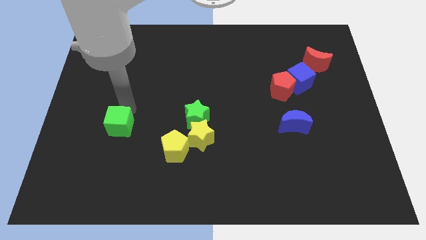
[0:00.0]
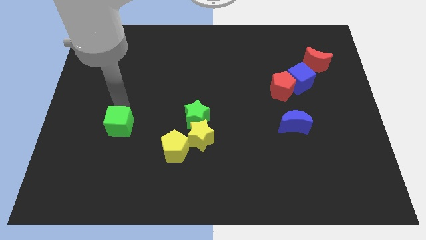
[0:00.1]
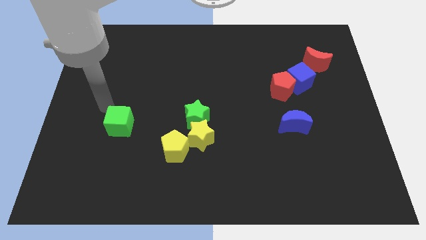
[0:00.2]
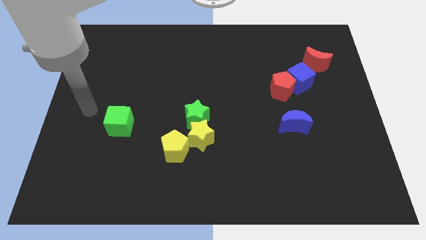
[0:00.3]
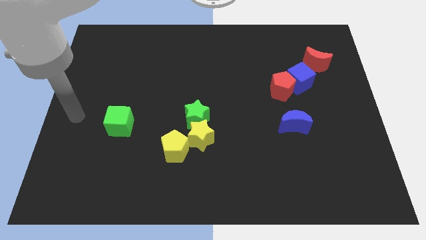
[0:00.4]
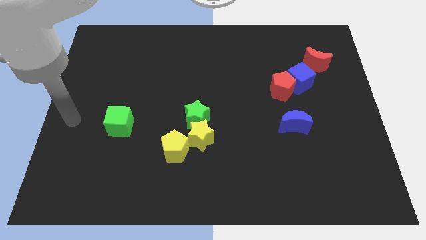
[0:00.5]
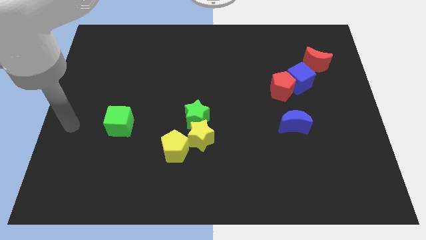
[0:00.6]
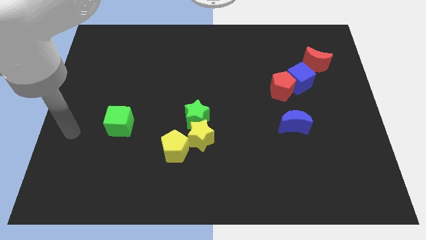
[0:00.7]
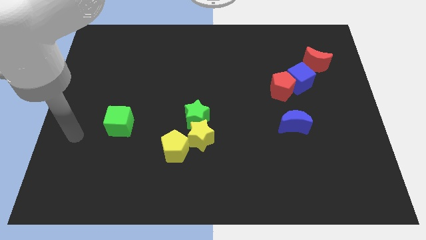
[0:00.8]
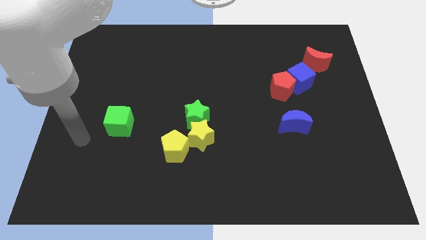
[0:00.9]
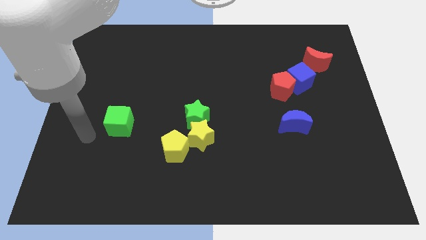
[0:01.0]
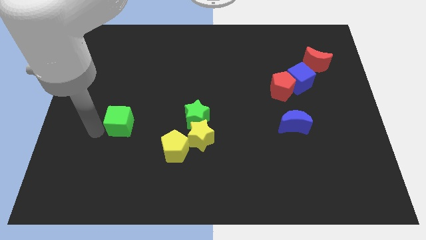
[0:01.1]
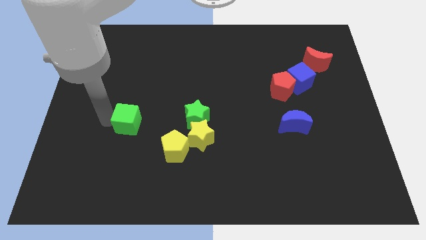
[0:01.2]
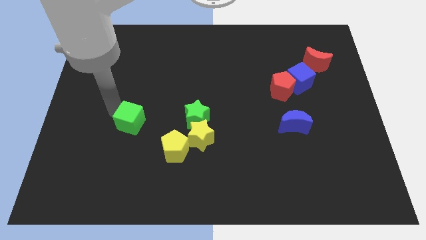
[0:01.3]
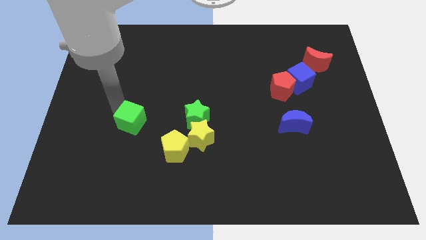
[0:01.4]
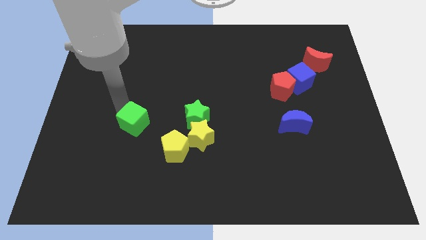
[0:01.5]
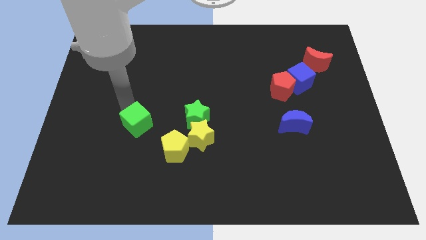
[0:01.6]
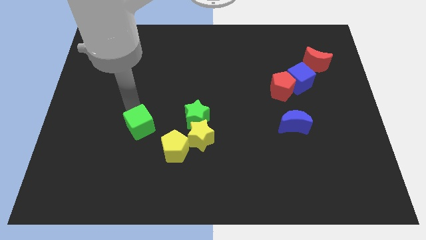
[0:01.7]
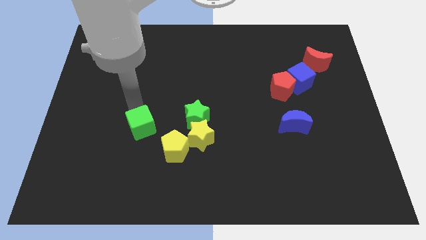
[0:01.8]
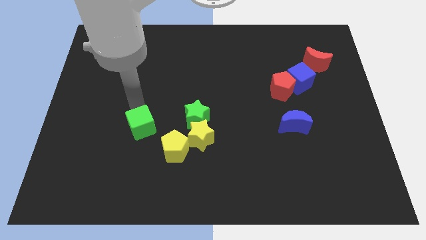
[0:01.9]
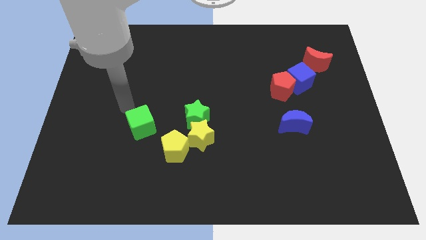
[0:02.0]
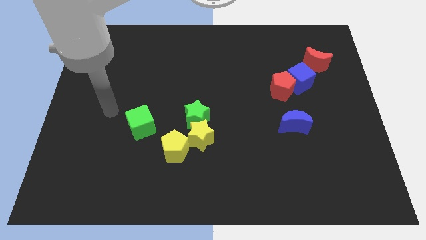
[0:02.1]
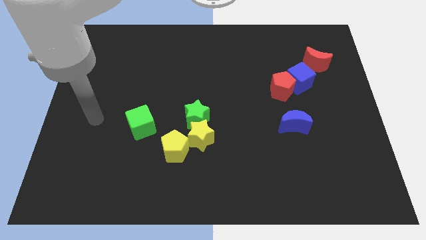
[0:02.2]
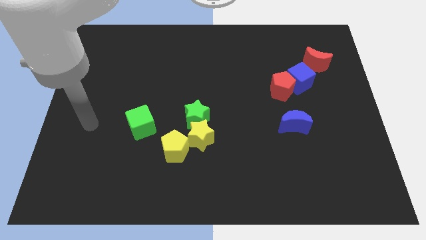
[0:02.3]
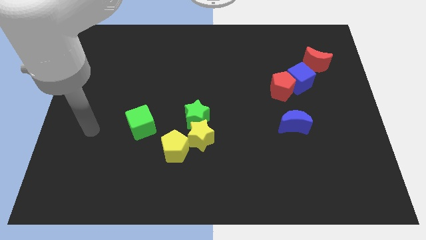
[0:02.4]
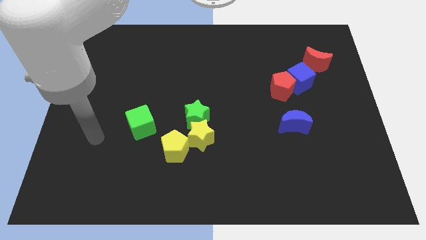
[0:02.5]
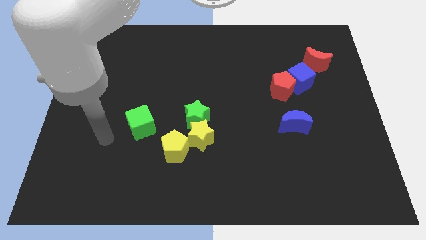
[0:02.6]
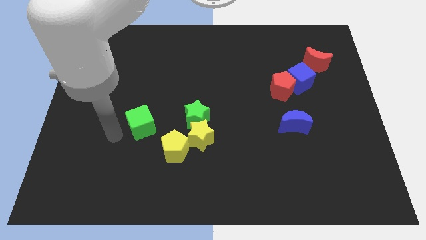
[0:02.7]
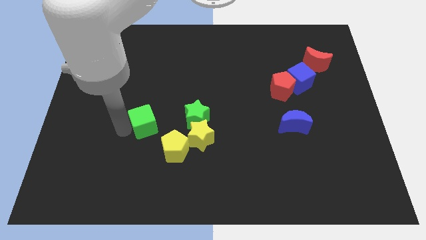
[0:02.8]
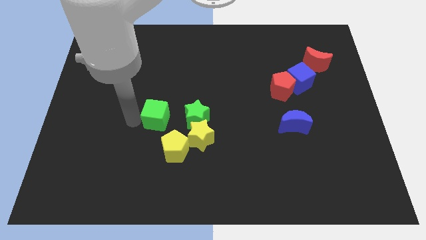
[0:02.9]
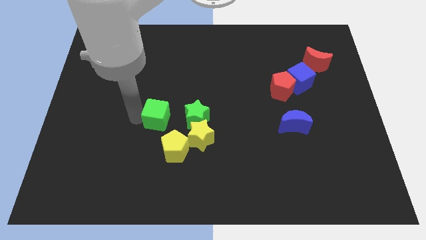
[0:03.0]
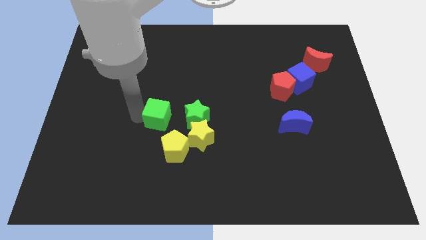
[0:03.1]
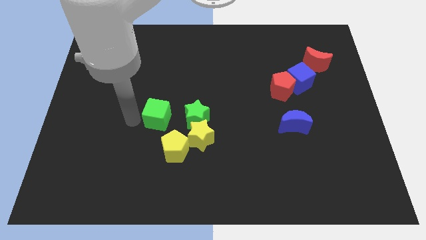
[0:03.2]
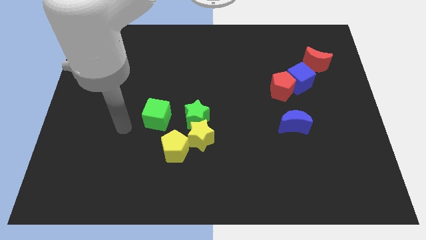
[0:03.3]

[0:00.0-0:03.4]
drag the green cube towards the green star

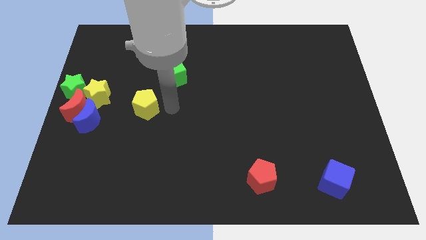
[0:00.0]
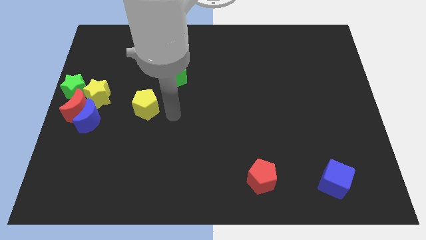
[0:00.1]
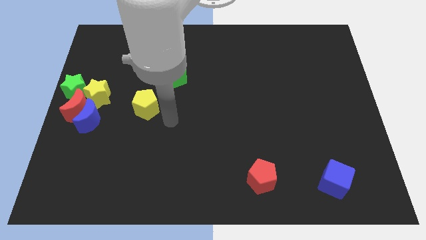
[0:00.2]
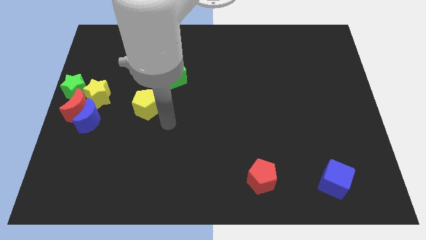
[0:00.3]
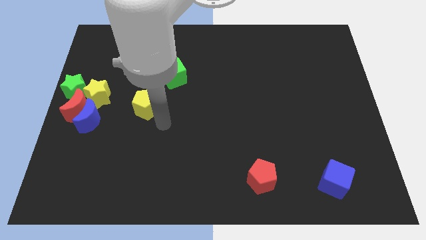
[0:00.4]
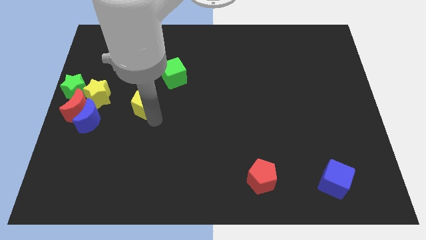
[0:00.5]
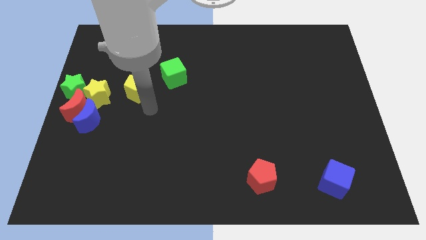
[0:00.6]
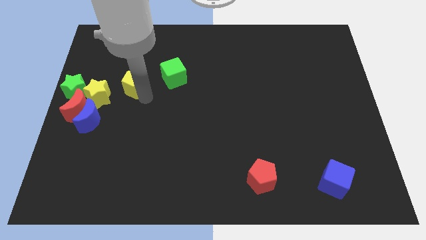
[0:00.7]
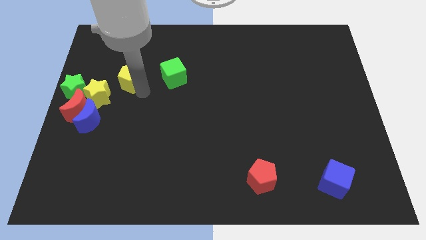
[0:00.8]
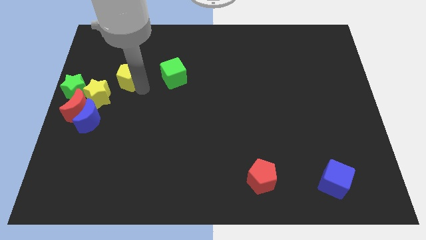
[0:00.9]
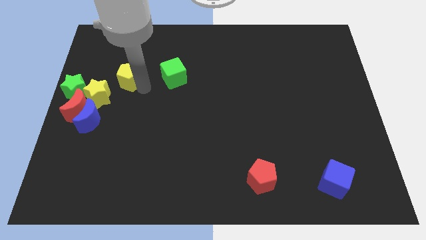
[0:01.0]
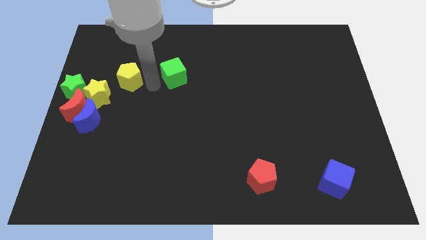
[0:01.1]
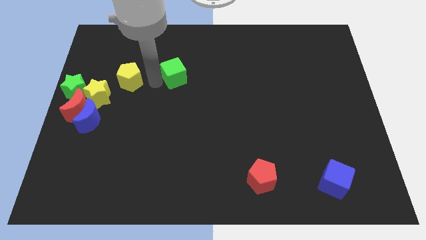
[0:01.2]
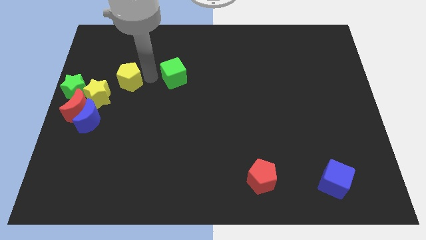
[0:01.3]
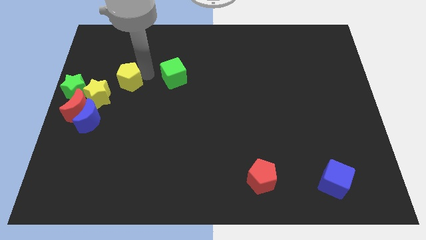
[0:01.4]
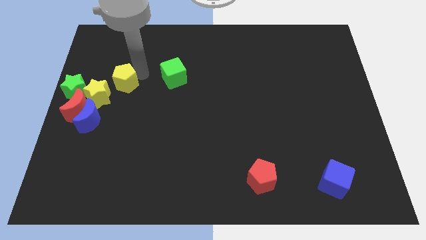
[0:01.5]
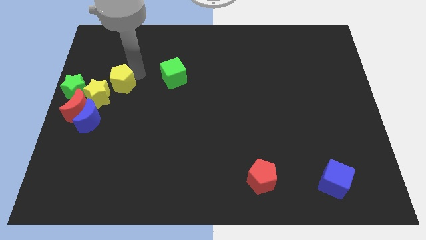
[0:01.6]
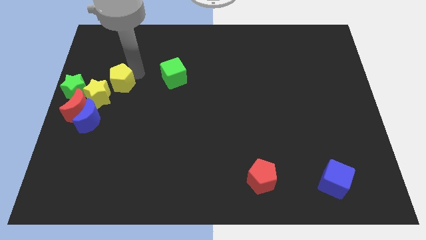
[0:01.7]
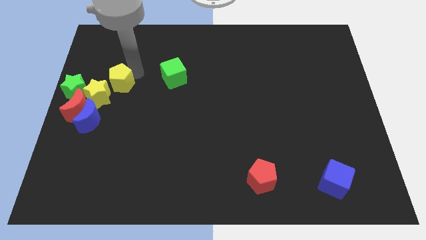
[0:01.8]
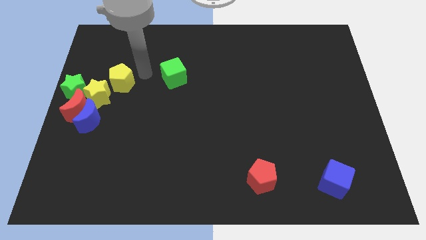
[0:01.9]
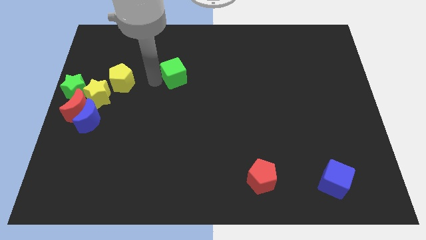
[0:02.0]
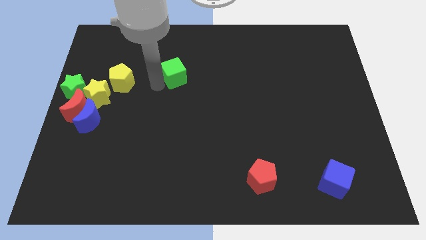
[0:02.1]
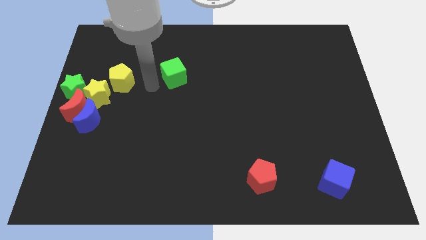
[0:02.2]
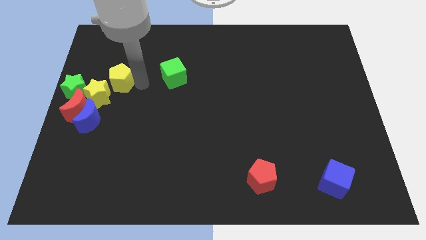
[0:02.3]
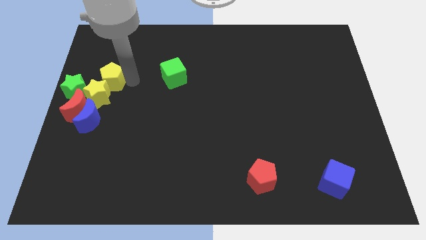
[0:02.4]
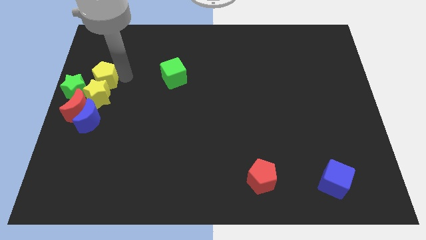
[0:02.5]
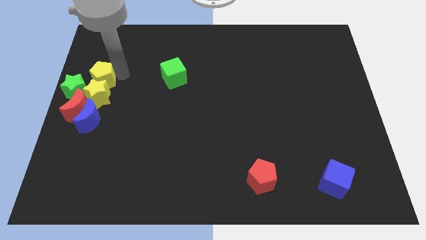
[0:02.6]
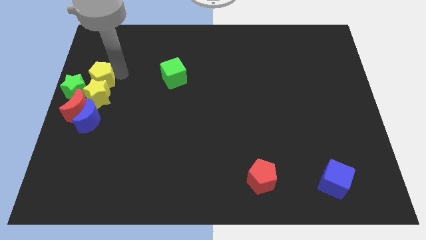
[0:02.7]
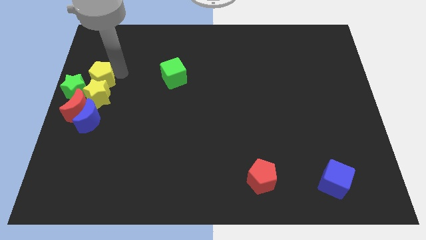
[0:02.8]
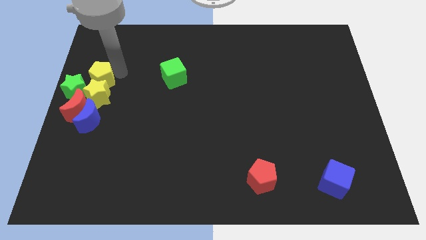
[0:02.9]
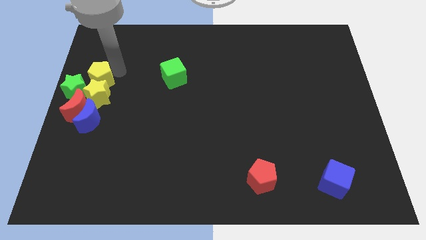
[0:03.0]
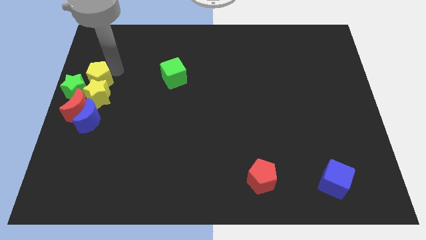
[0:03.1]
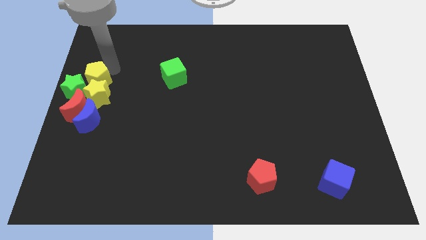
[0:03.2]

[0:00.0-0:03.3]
put yellow pentagon above yellow star

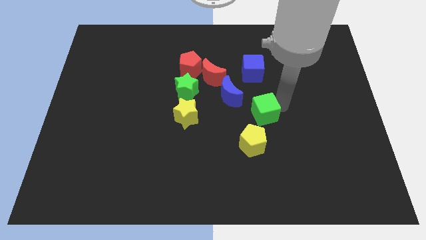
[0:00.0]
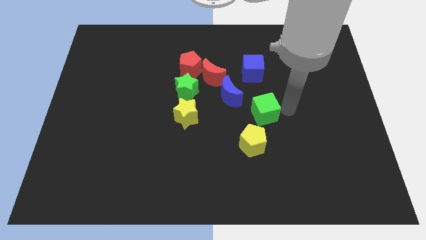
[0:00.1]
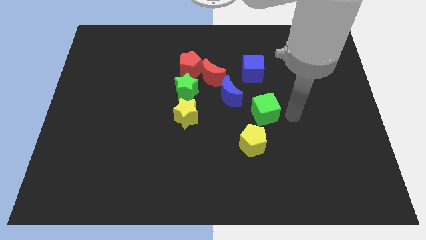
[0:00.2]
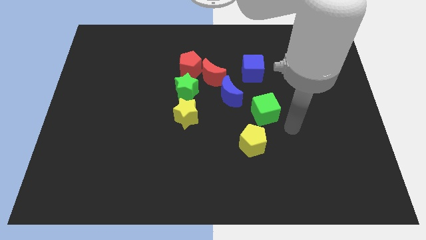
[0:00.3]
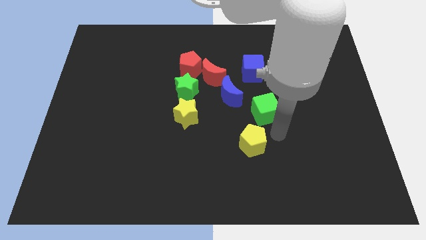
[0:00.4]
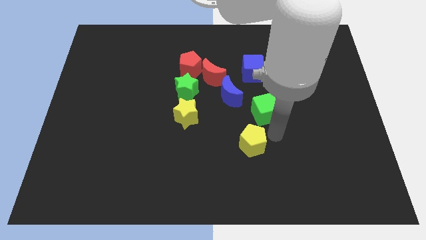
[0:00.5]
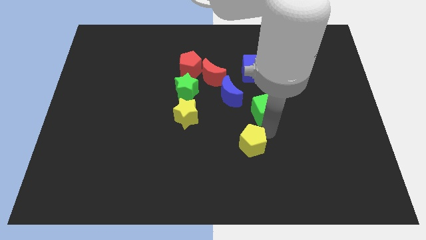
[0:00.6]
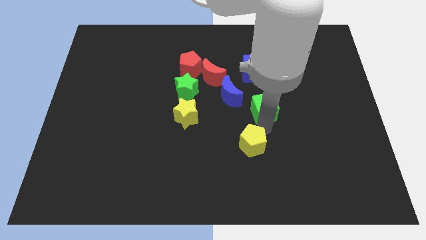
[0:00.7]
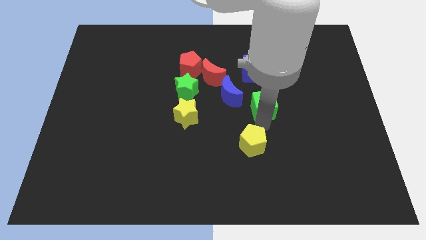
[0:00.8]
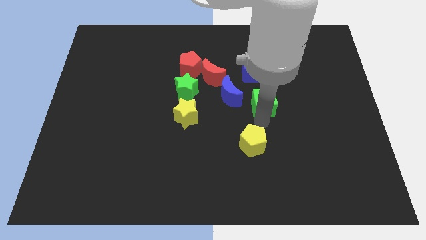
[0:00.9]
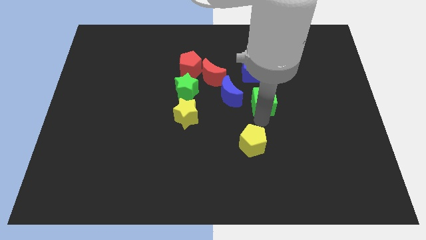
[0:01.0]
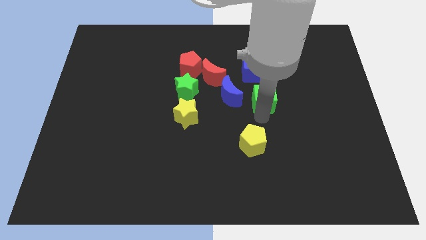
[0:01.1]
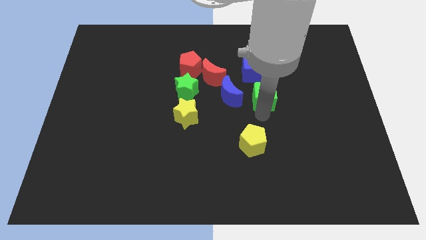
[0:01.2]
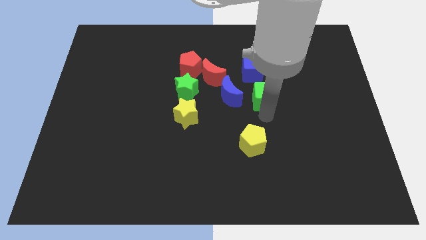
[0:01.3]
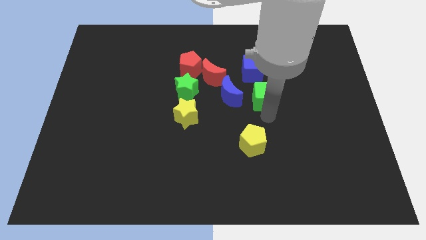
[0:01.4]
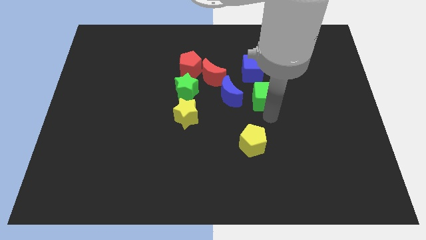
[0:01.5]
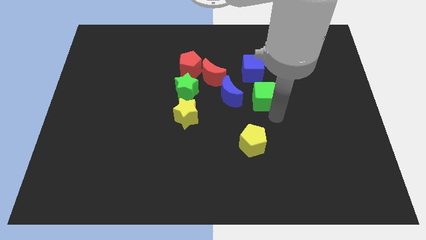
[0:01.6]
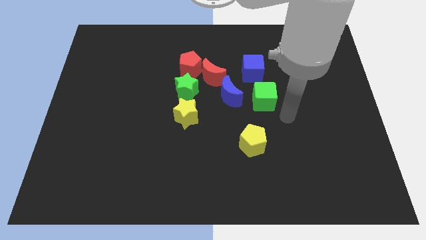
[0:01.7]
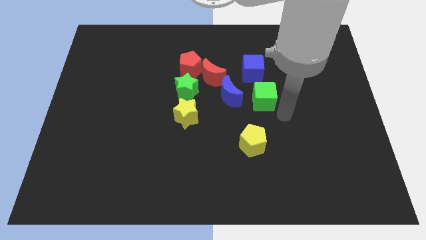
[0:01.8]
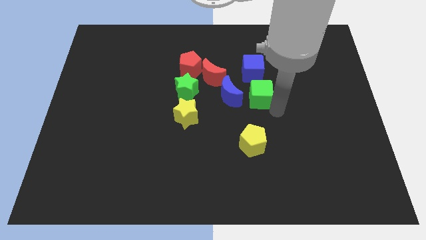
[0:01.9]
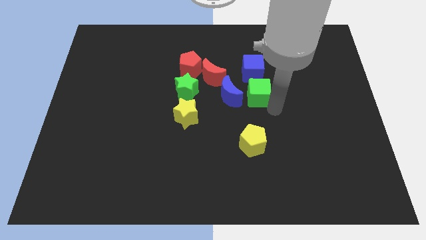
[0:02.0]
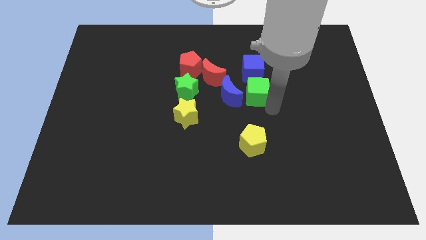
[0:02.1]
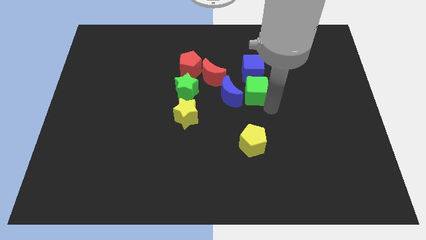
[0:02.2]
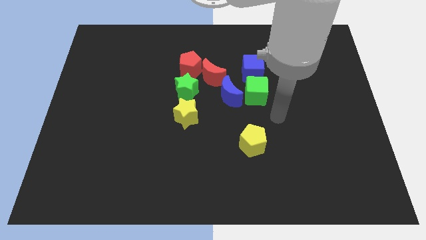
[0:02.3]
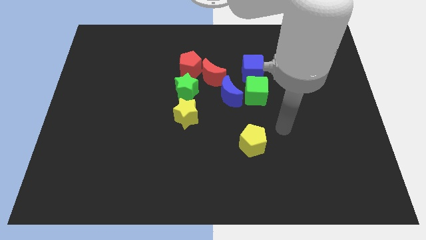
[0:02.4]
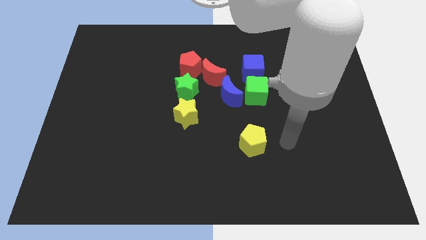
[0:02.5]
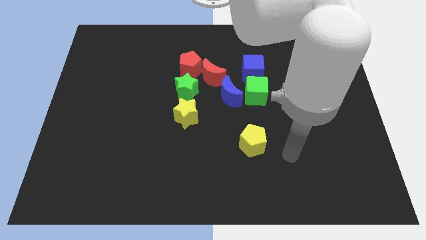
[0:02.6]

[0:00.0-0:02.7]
push the green cube towards the bottom of the blue cube
